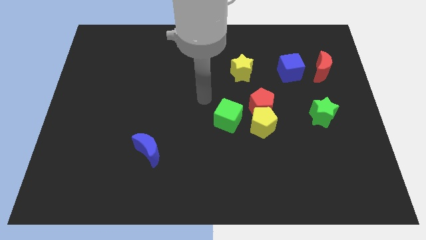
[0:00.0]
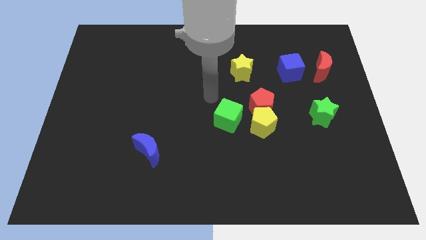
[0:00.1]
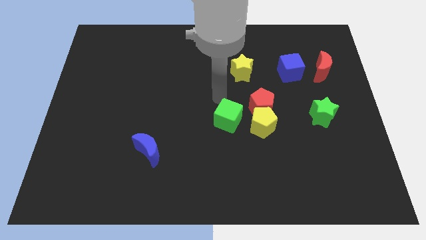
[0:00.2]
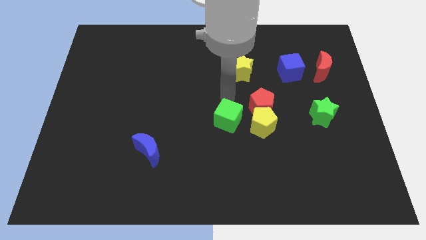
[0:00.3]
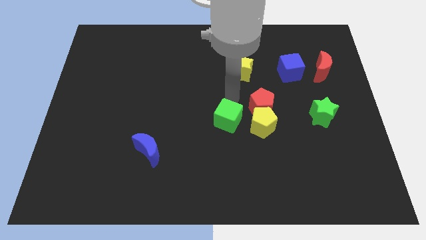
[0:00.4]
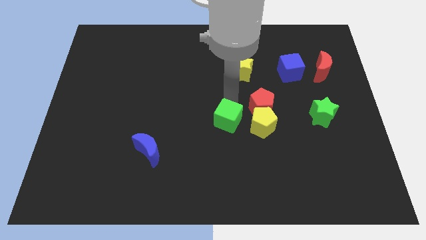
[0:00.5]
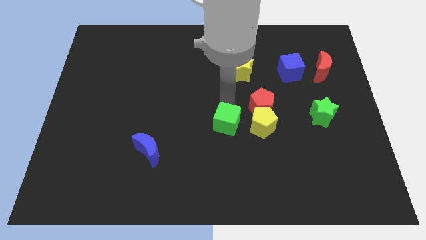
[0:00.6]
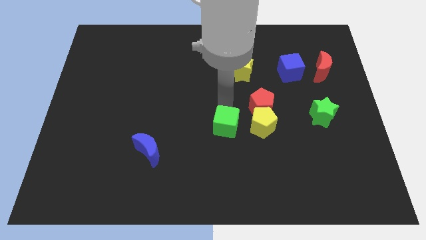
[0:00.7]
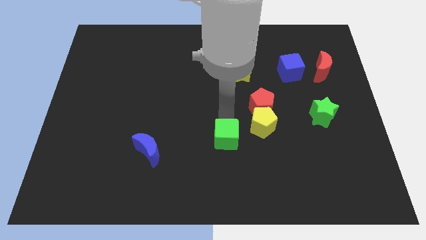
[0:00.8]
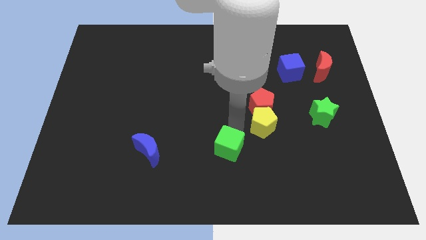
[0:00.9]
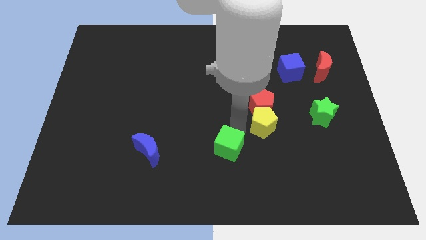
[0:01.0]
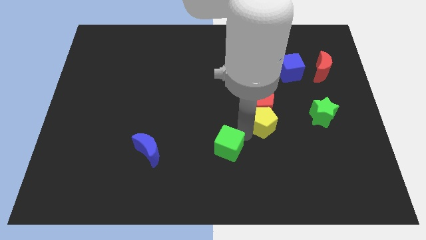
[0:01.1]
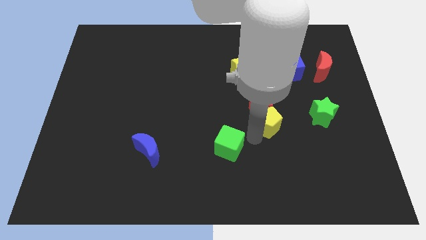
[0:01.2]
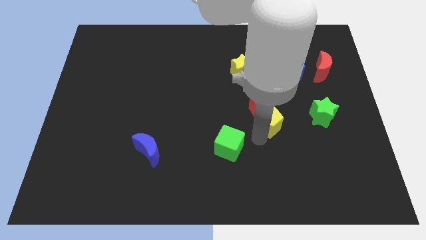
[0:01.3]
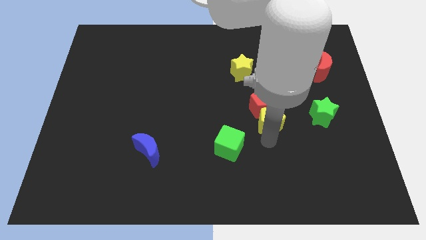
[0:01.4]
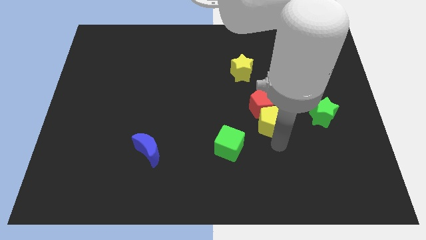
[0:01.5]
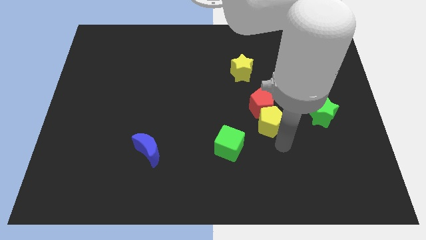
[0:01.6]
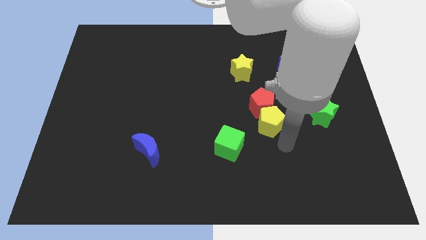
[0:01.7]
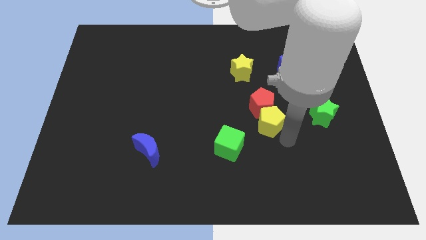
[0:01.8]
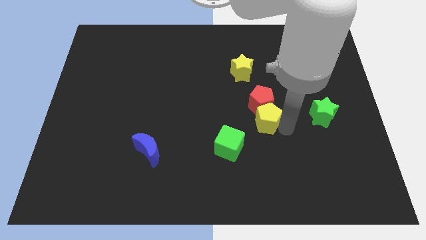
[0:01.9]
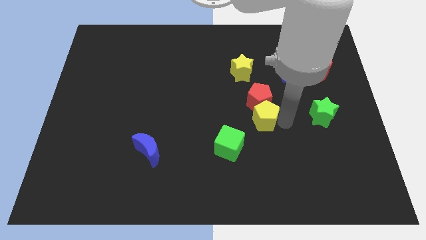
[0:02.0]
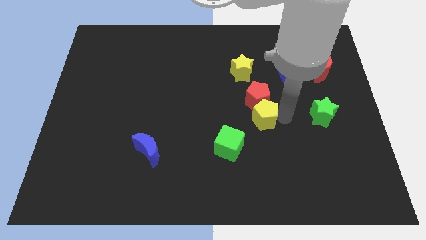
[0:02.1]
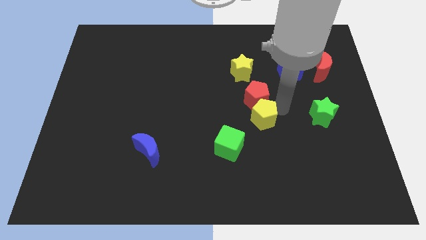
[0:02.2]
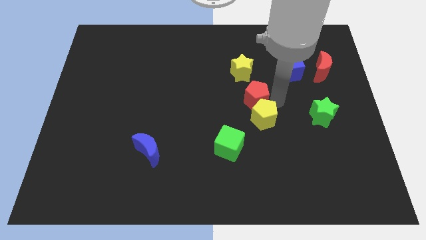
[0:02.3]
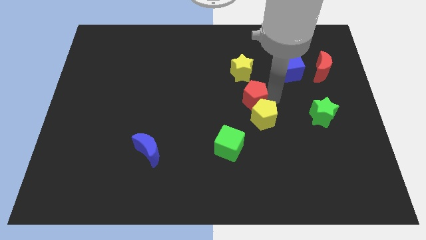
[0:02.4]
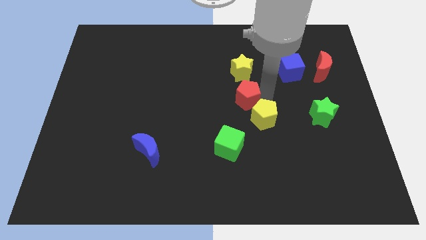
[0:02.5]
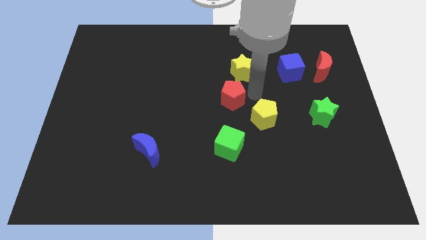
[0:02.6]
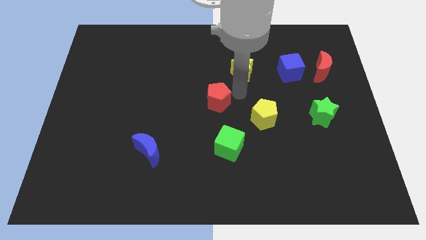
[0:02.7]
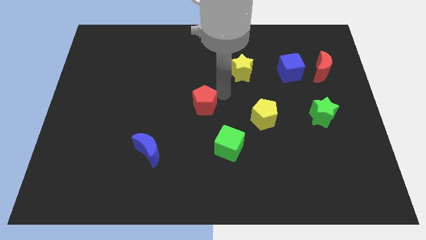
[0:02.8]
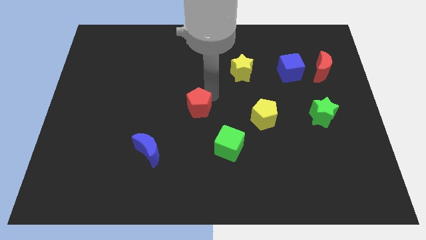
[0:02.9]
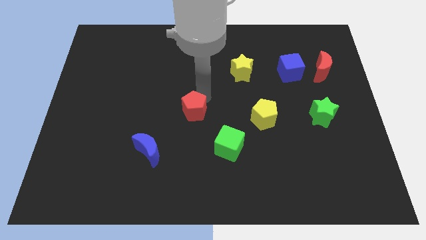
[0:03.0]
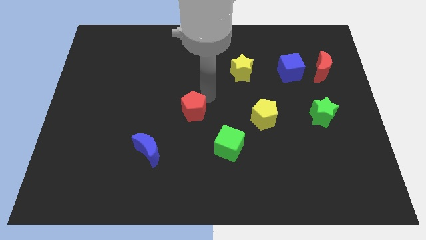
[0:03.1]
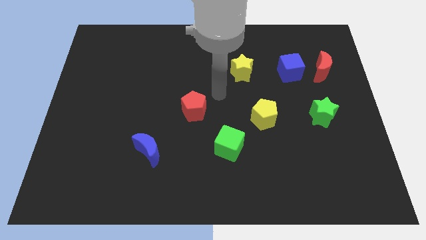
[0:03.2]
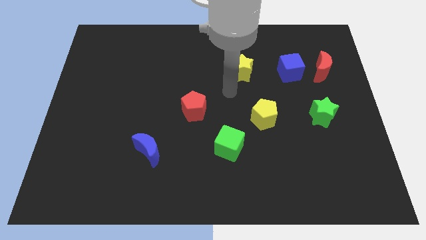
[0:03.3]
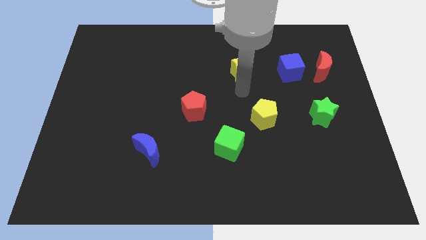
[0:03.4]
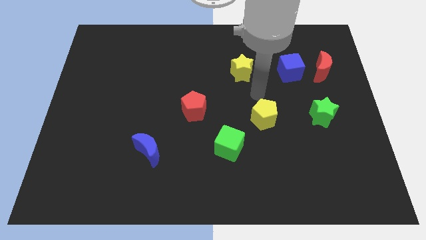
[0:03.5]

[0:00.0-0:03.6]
move away the red pentagon from yellow pentagon

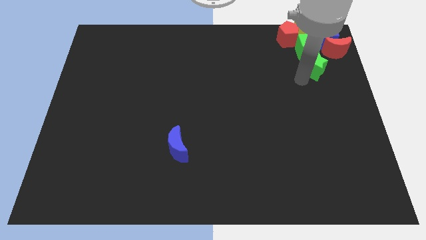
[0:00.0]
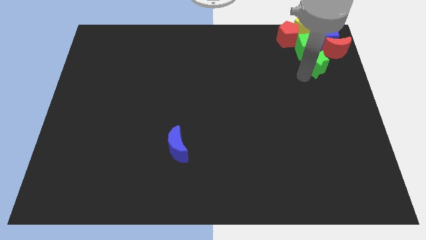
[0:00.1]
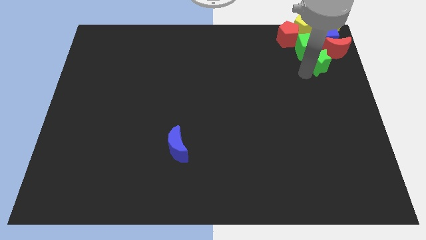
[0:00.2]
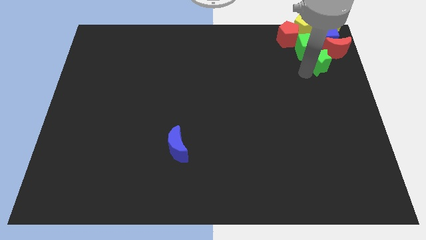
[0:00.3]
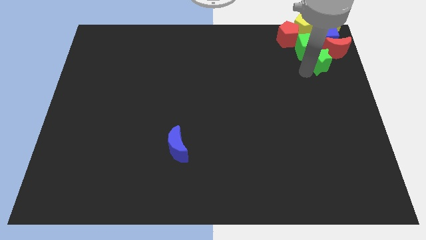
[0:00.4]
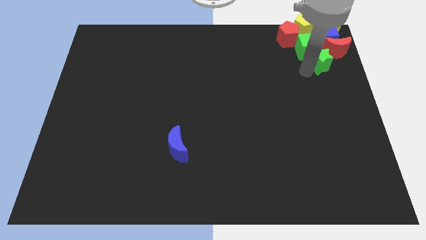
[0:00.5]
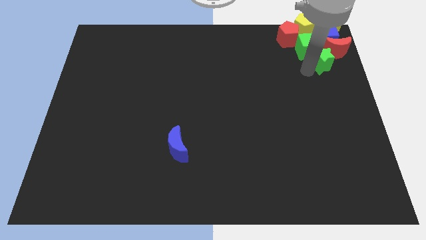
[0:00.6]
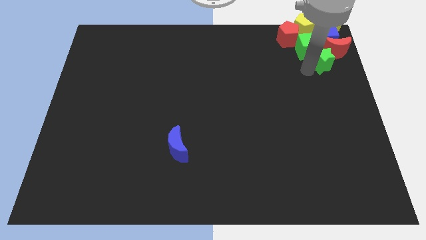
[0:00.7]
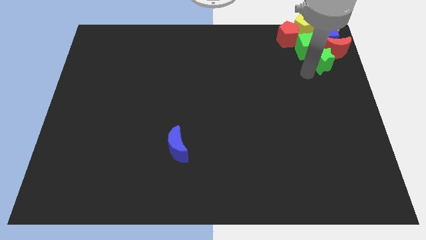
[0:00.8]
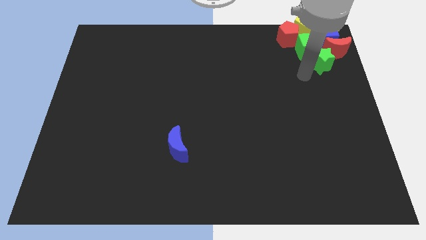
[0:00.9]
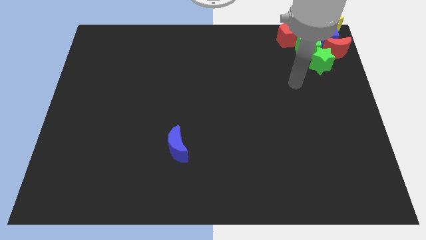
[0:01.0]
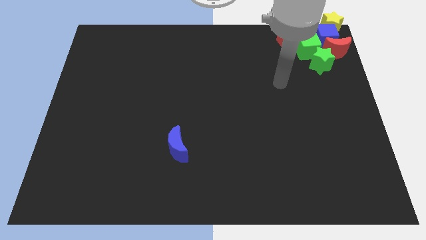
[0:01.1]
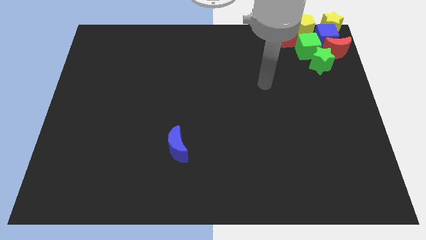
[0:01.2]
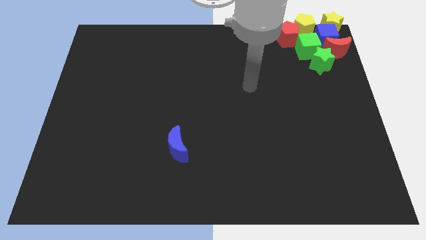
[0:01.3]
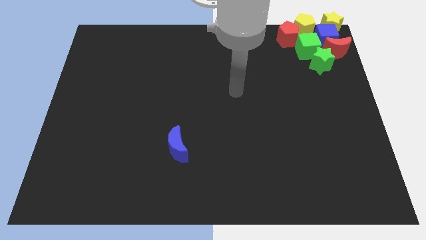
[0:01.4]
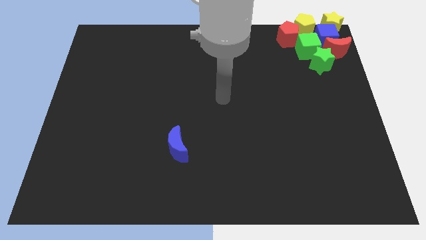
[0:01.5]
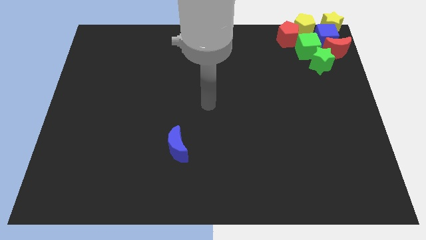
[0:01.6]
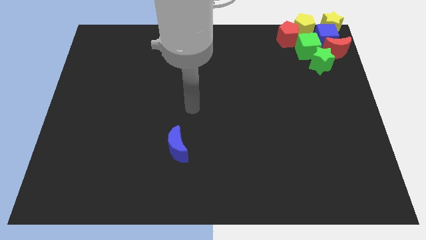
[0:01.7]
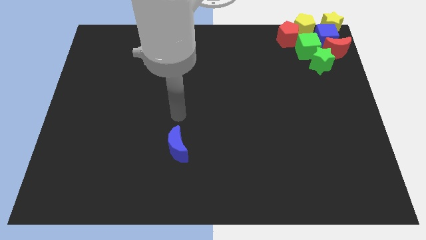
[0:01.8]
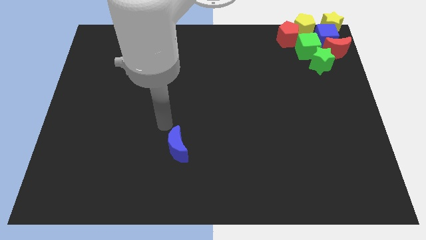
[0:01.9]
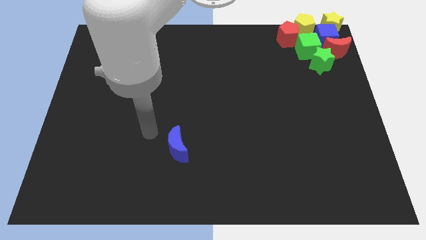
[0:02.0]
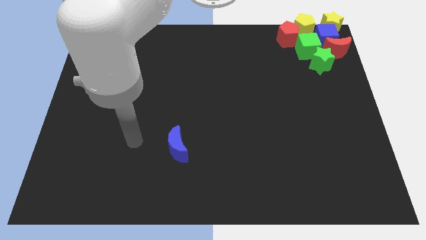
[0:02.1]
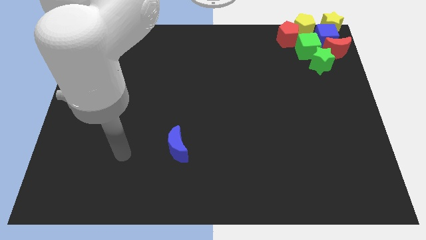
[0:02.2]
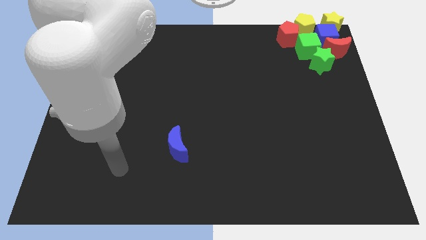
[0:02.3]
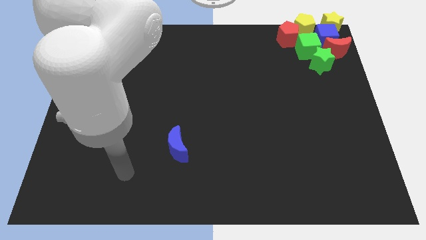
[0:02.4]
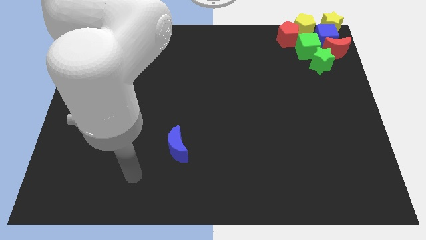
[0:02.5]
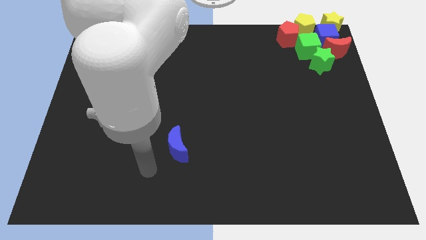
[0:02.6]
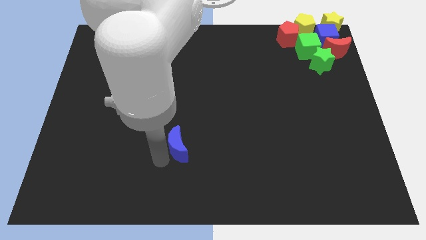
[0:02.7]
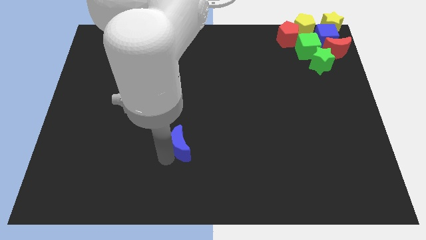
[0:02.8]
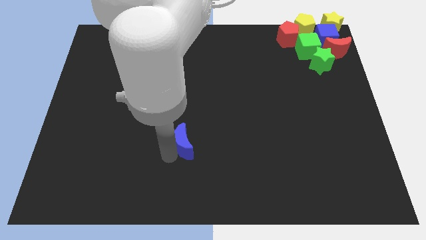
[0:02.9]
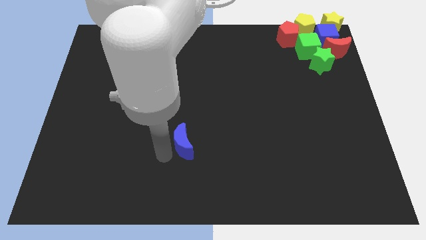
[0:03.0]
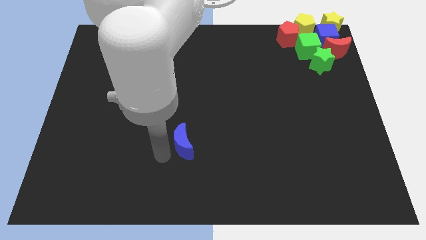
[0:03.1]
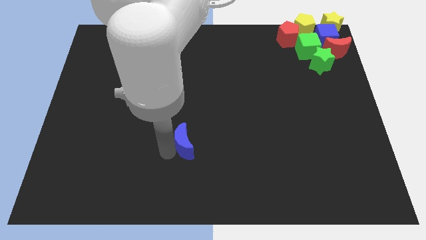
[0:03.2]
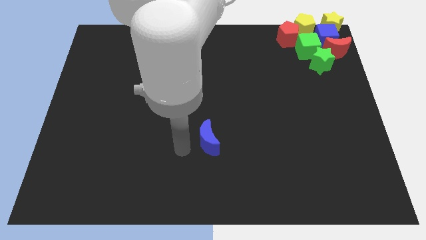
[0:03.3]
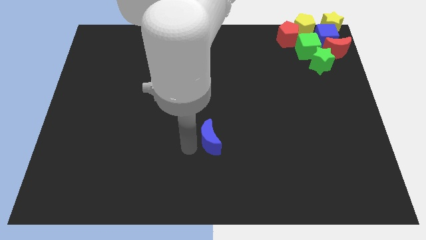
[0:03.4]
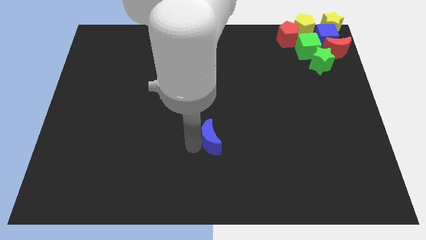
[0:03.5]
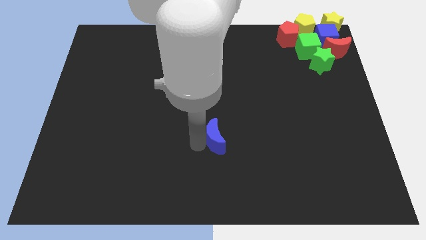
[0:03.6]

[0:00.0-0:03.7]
move the blue moon to the bottom center

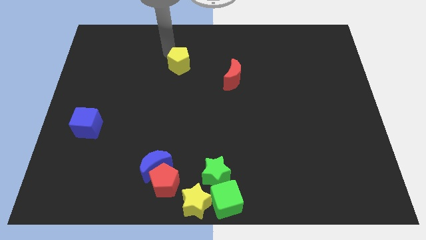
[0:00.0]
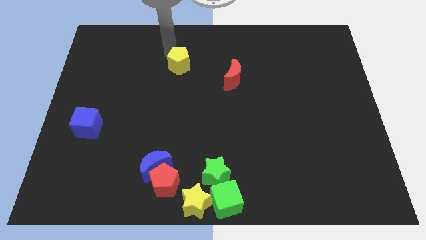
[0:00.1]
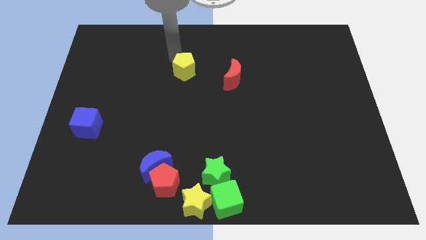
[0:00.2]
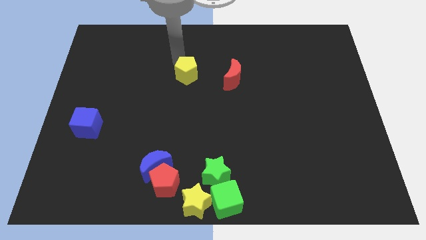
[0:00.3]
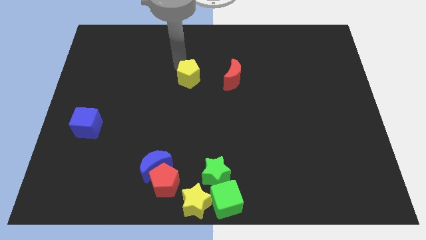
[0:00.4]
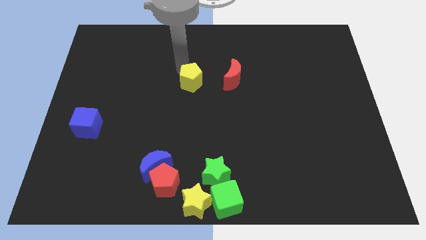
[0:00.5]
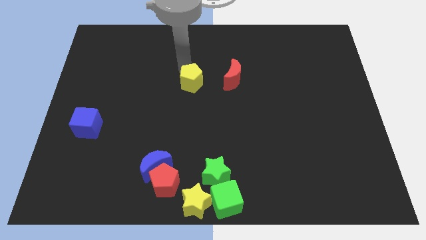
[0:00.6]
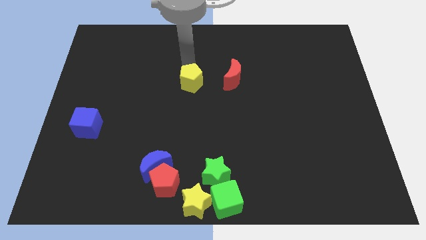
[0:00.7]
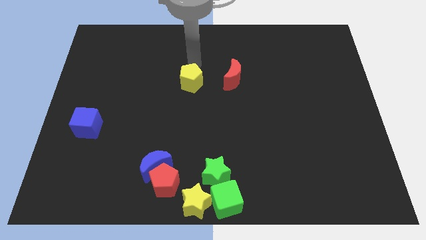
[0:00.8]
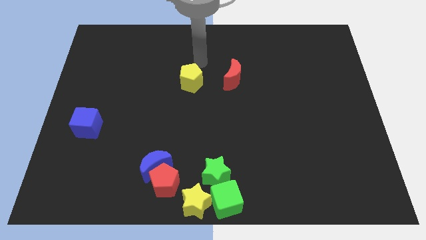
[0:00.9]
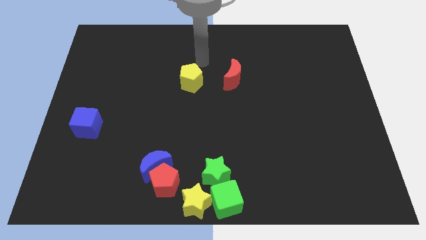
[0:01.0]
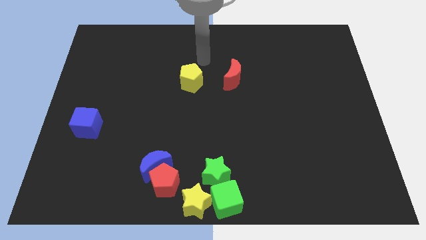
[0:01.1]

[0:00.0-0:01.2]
slide yellow pentagon to left of red moon

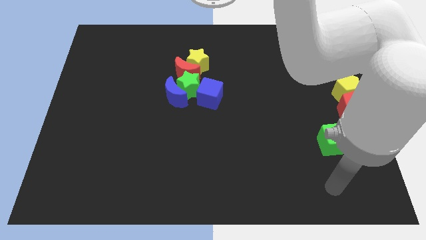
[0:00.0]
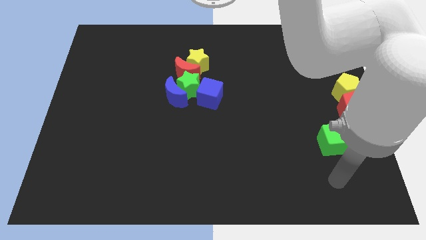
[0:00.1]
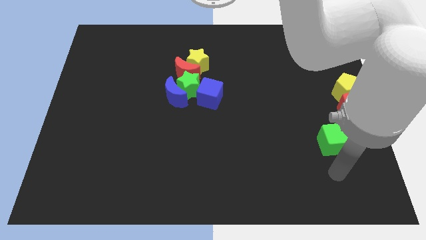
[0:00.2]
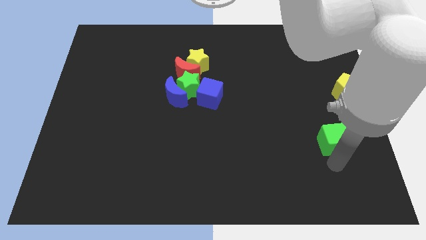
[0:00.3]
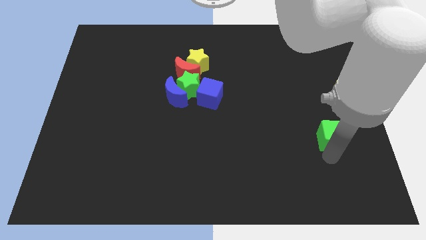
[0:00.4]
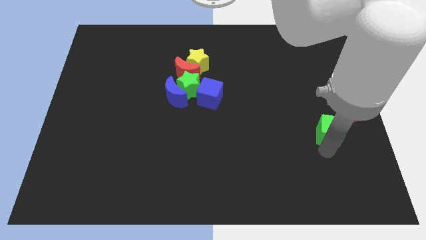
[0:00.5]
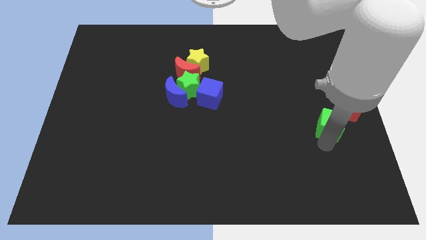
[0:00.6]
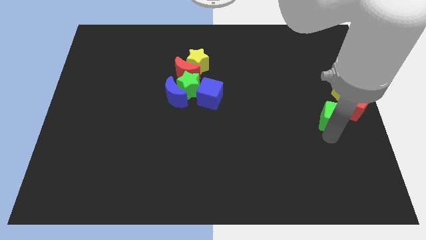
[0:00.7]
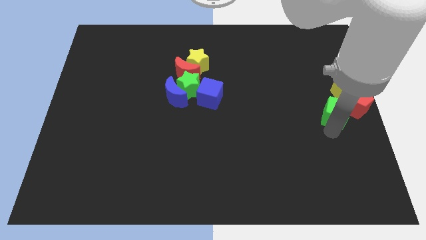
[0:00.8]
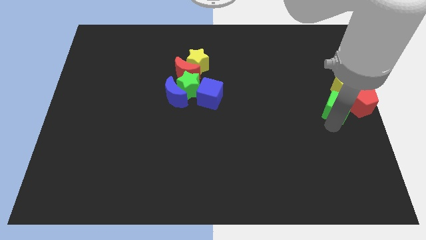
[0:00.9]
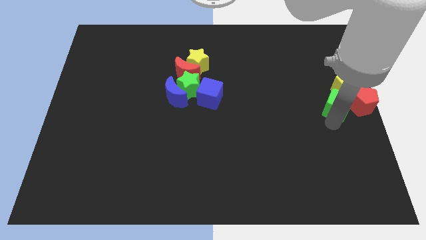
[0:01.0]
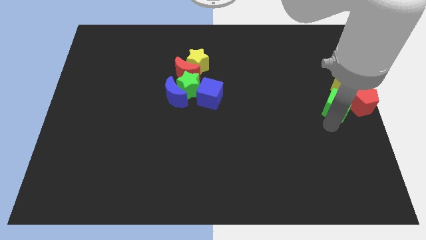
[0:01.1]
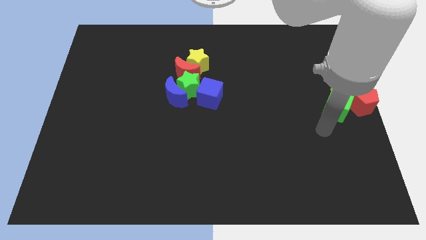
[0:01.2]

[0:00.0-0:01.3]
move the green cube into the group of block
